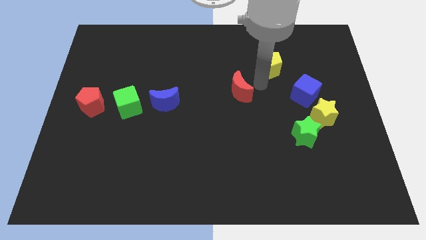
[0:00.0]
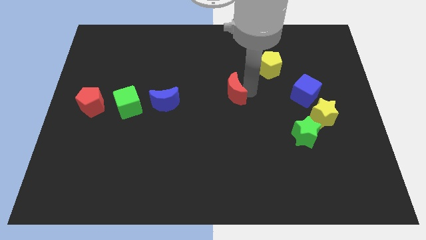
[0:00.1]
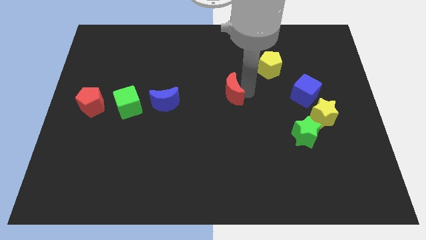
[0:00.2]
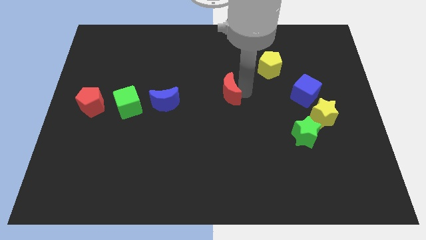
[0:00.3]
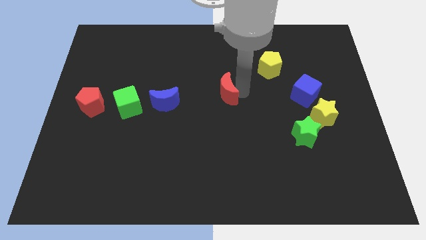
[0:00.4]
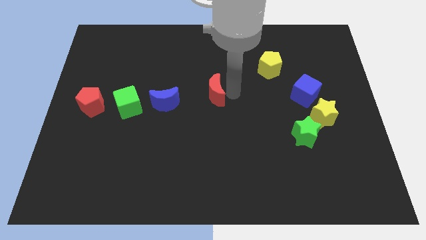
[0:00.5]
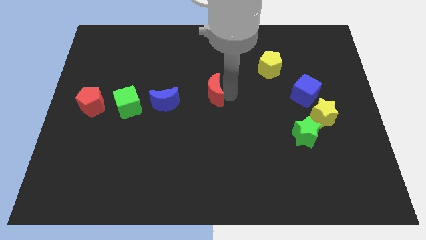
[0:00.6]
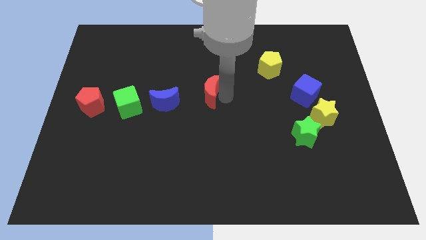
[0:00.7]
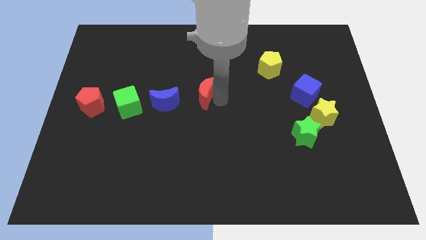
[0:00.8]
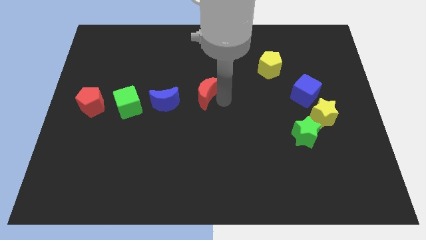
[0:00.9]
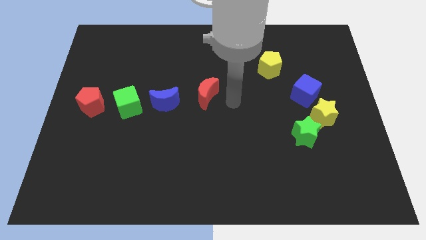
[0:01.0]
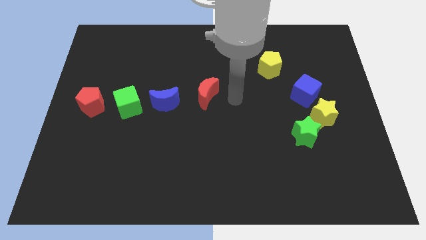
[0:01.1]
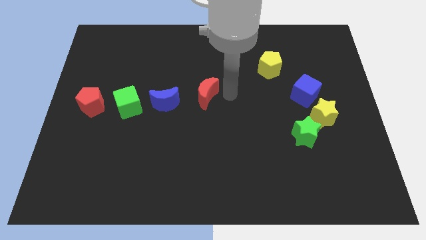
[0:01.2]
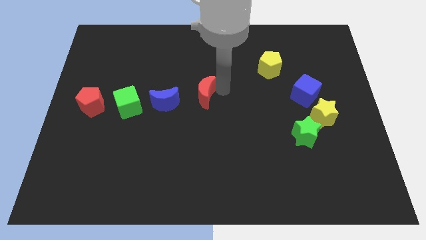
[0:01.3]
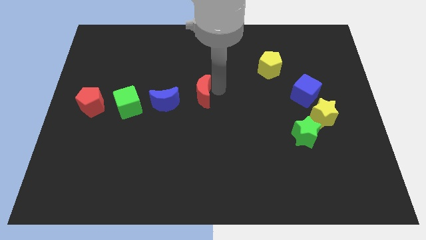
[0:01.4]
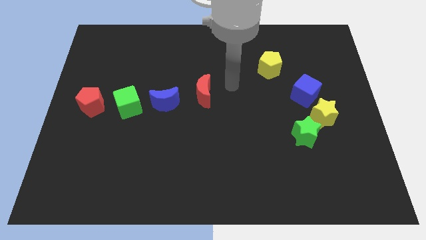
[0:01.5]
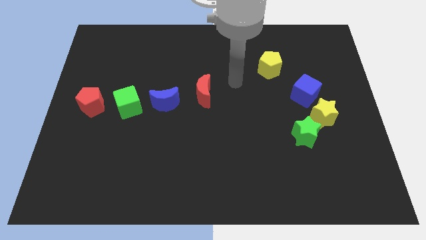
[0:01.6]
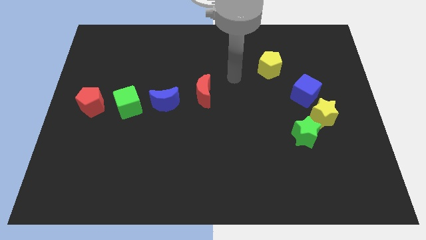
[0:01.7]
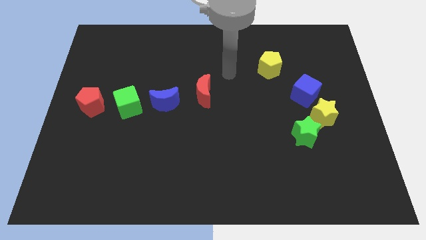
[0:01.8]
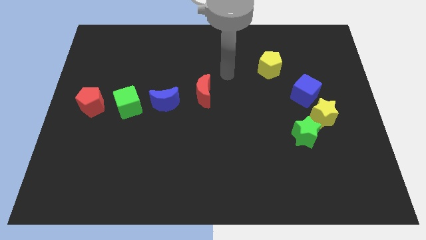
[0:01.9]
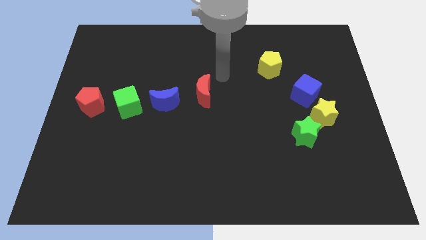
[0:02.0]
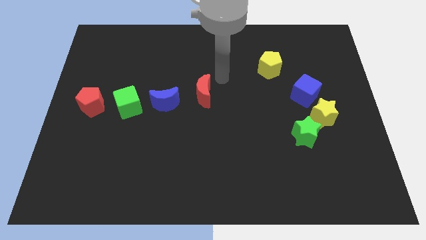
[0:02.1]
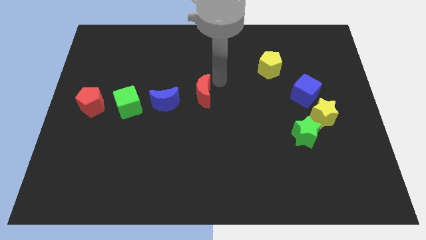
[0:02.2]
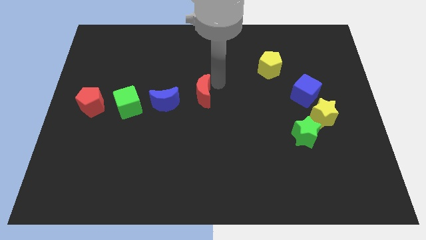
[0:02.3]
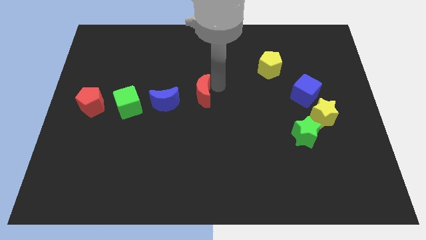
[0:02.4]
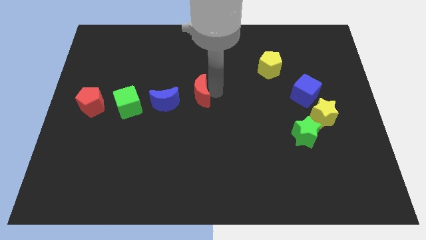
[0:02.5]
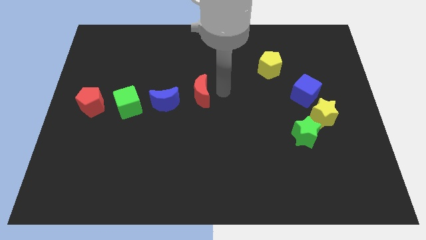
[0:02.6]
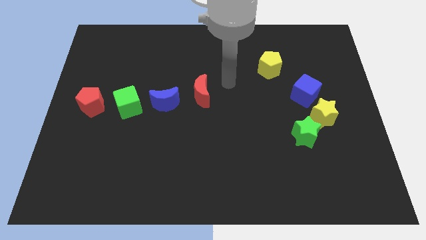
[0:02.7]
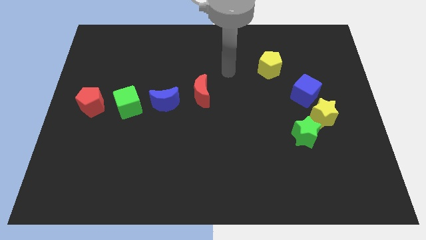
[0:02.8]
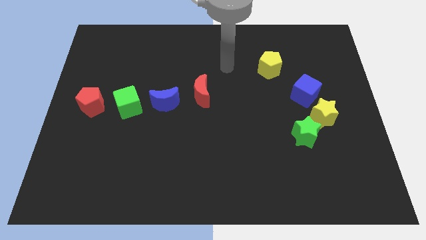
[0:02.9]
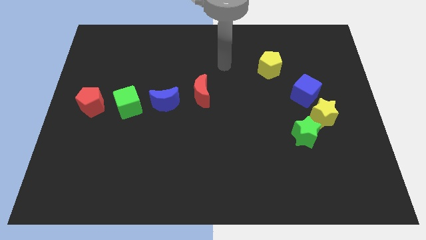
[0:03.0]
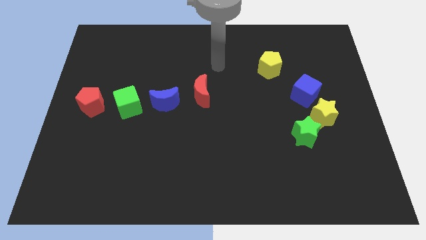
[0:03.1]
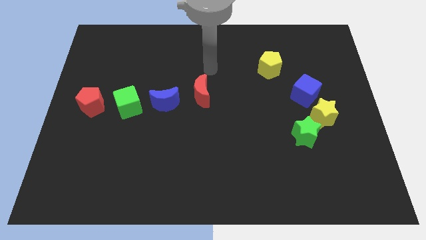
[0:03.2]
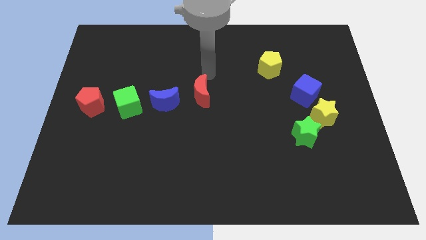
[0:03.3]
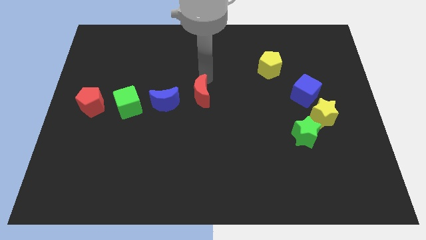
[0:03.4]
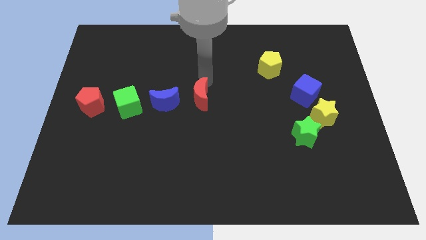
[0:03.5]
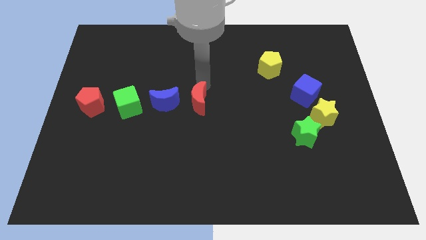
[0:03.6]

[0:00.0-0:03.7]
move the red crescent to the centre of the board

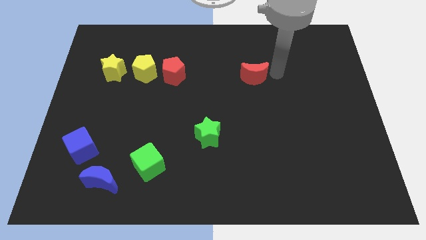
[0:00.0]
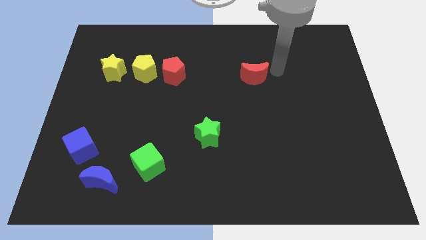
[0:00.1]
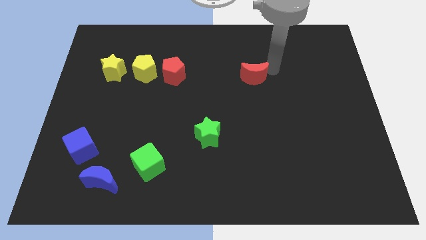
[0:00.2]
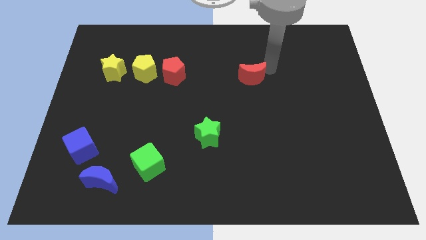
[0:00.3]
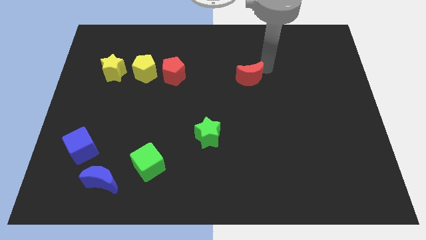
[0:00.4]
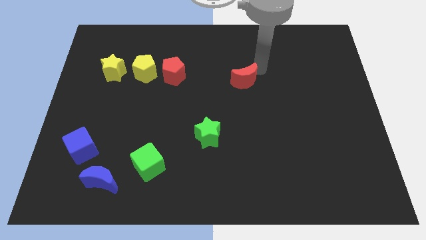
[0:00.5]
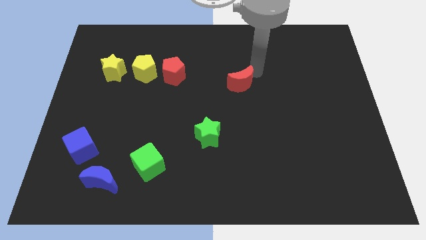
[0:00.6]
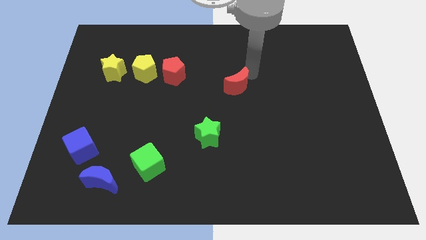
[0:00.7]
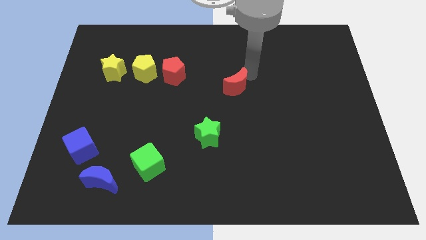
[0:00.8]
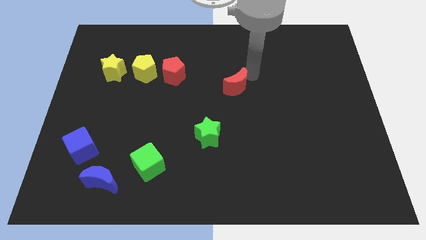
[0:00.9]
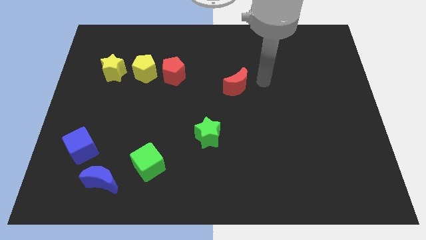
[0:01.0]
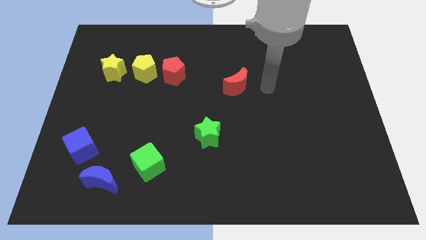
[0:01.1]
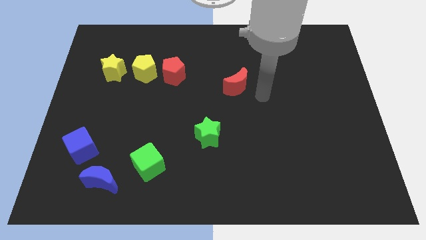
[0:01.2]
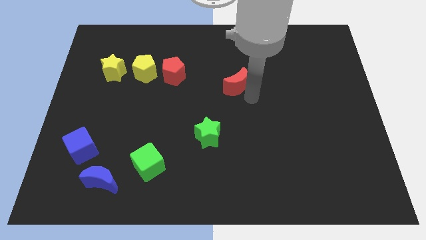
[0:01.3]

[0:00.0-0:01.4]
drag the red moon slightly to the left

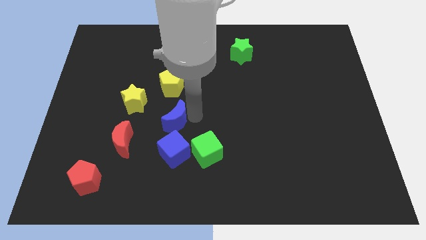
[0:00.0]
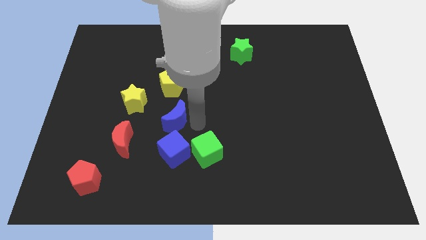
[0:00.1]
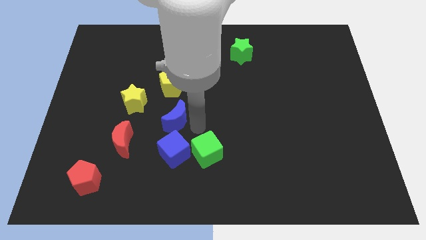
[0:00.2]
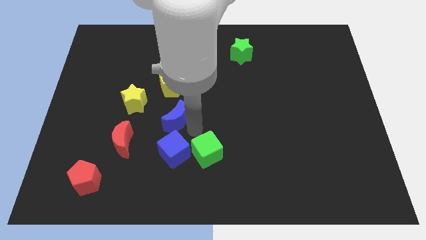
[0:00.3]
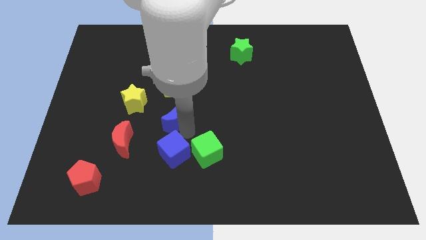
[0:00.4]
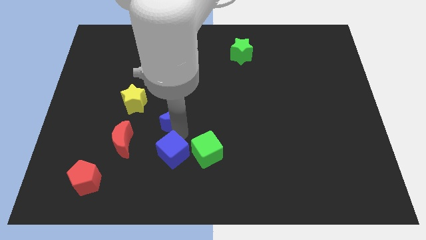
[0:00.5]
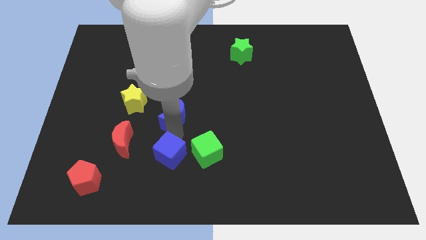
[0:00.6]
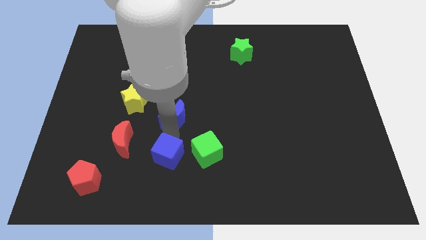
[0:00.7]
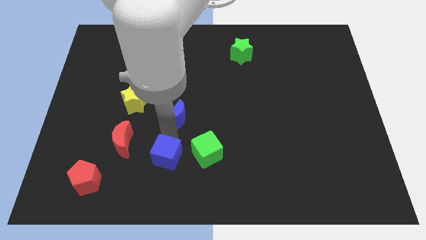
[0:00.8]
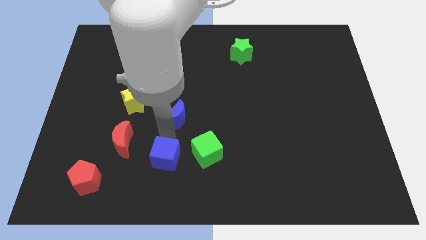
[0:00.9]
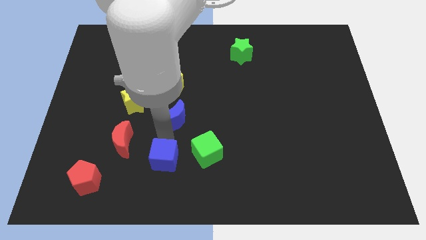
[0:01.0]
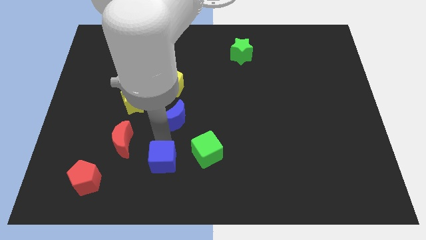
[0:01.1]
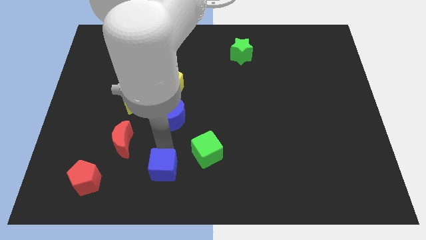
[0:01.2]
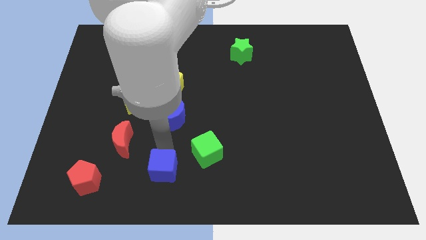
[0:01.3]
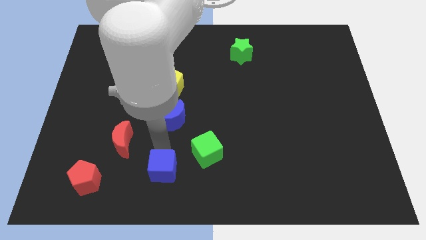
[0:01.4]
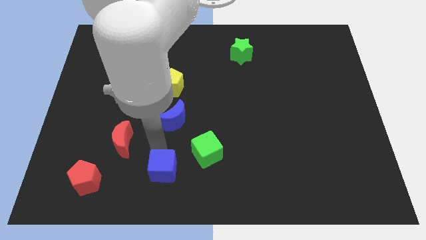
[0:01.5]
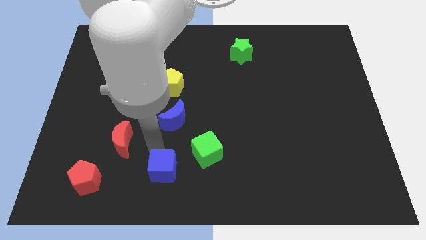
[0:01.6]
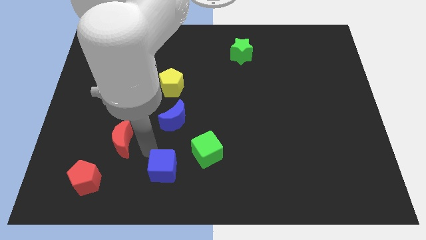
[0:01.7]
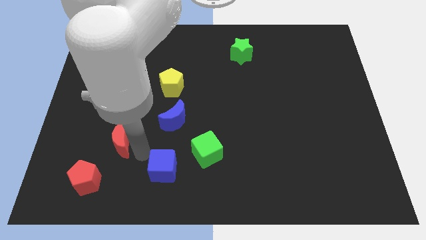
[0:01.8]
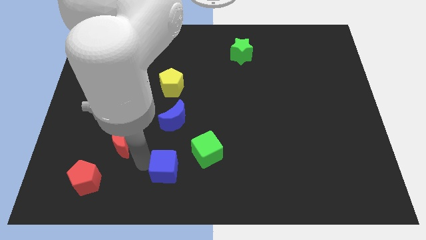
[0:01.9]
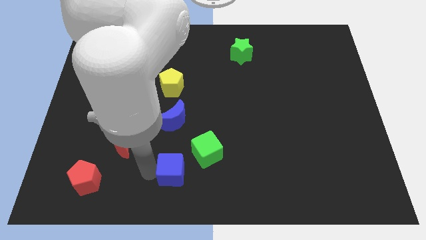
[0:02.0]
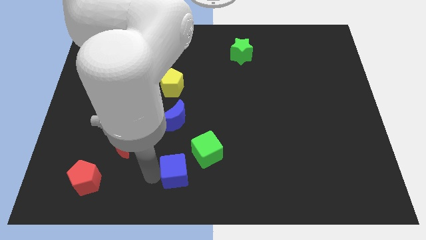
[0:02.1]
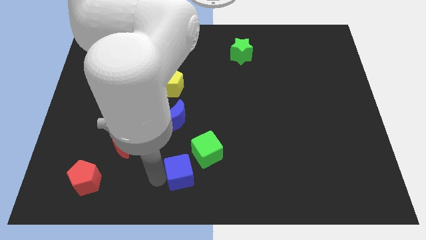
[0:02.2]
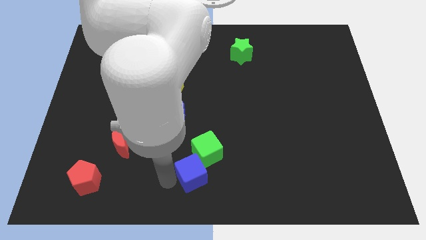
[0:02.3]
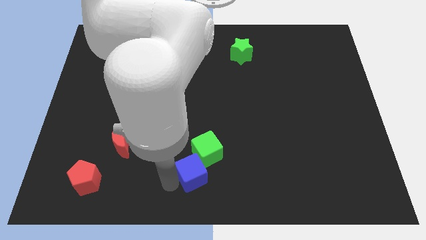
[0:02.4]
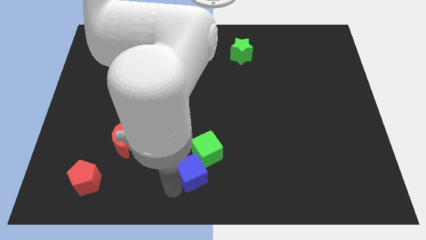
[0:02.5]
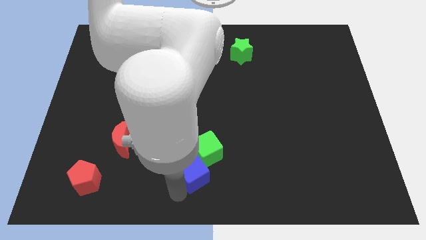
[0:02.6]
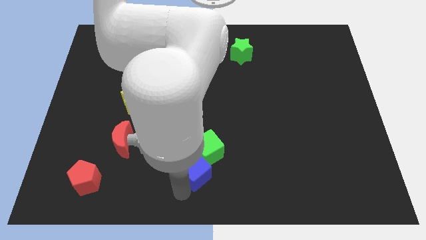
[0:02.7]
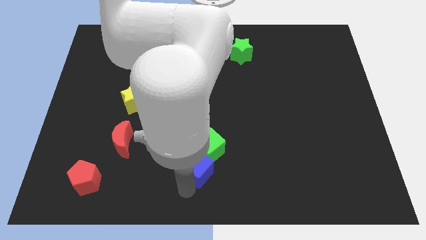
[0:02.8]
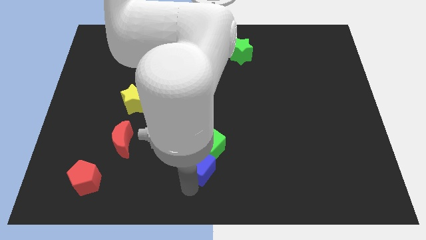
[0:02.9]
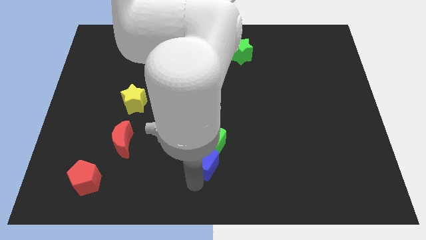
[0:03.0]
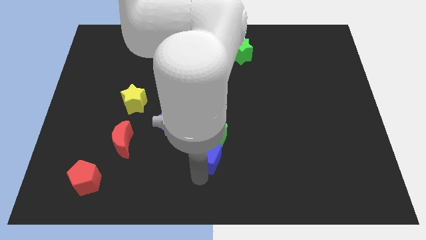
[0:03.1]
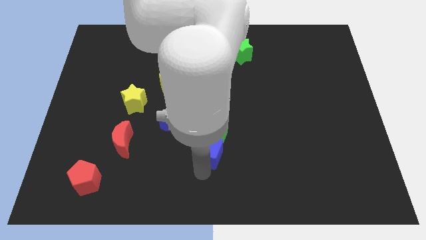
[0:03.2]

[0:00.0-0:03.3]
push blue cube into green cube

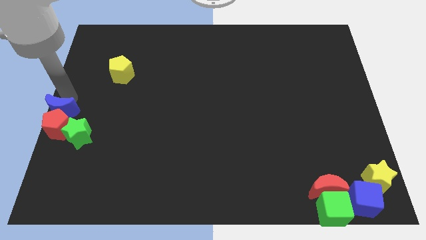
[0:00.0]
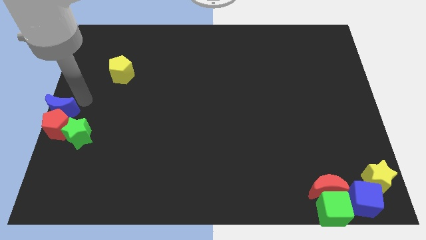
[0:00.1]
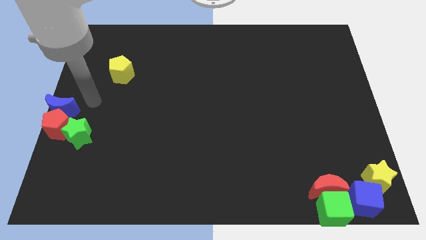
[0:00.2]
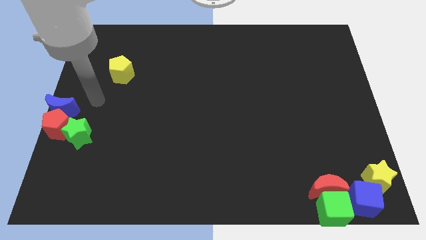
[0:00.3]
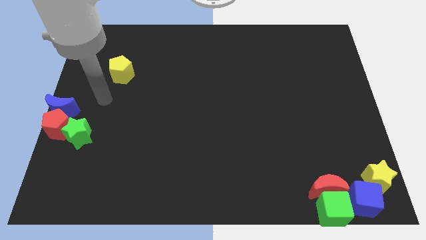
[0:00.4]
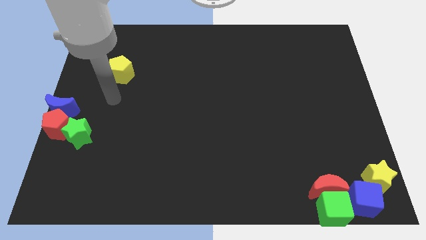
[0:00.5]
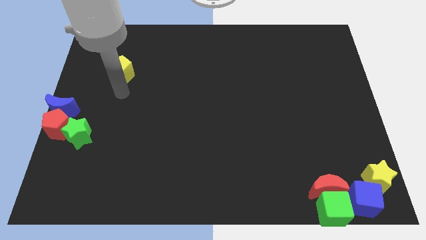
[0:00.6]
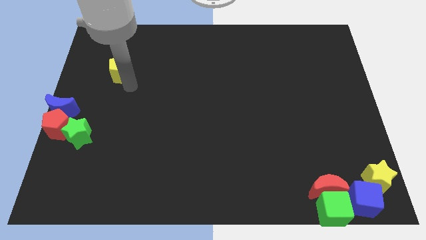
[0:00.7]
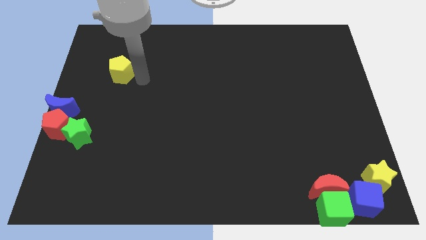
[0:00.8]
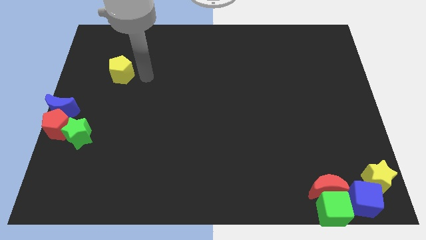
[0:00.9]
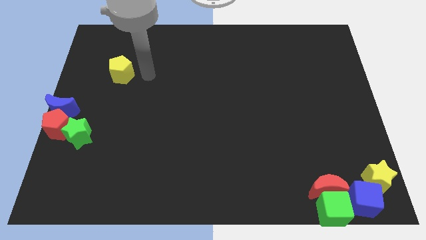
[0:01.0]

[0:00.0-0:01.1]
place your arm at the right of the yellow pentagon
